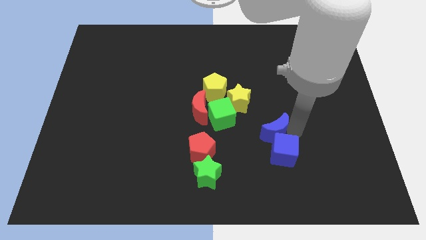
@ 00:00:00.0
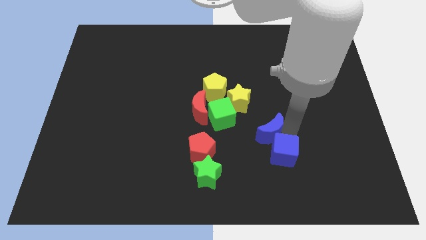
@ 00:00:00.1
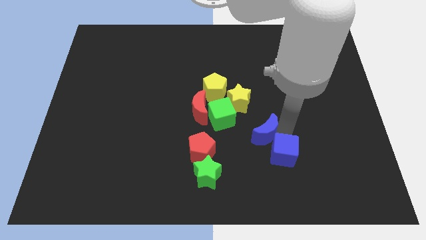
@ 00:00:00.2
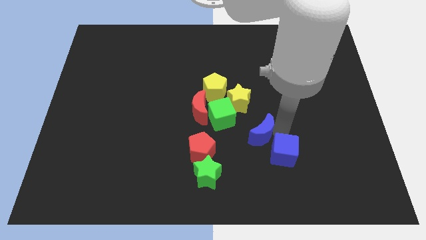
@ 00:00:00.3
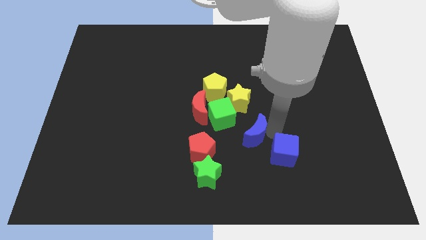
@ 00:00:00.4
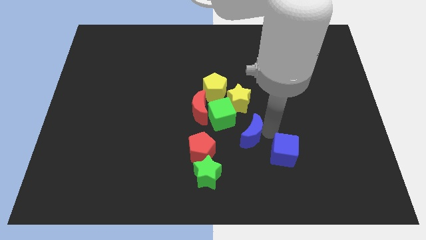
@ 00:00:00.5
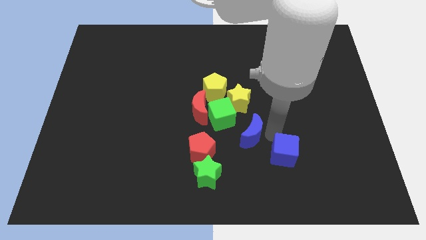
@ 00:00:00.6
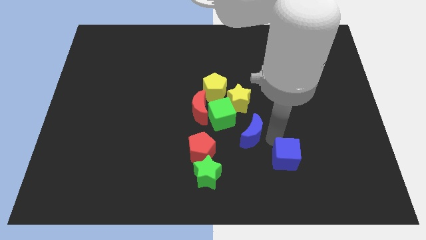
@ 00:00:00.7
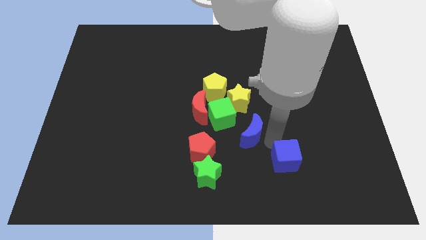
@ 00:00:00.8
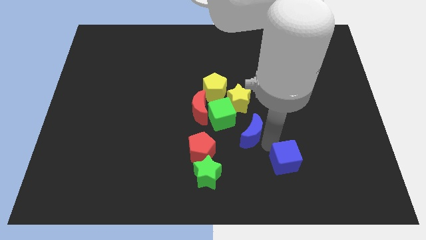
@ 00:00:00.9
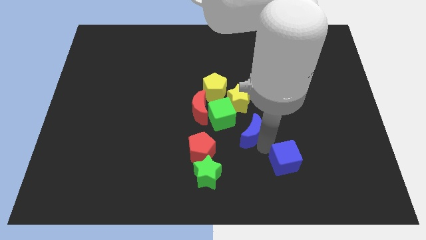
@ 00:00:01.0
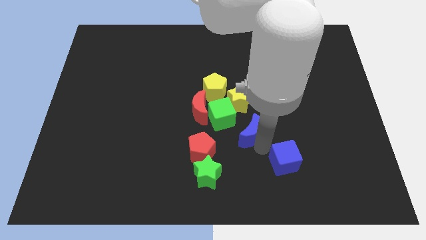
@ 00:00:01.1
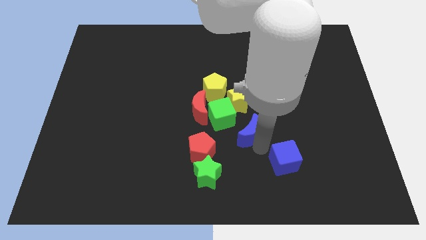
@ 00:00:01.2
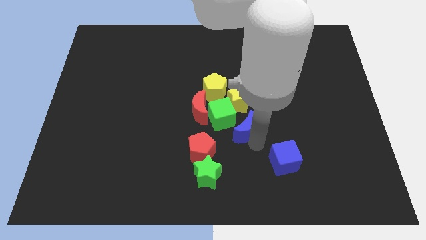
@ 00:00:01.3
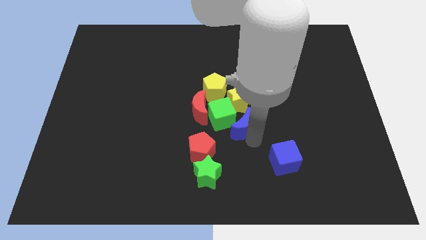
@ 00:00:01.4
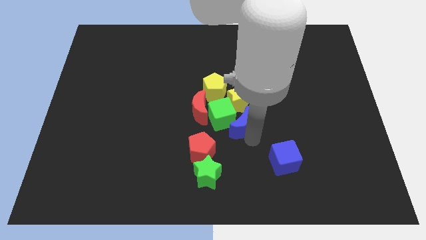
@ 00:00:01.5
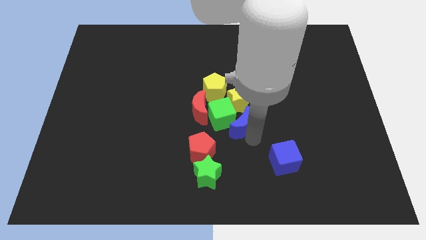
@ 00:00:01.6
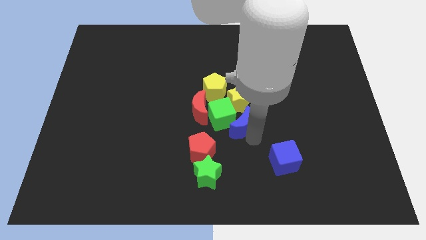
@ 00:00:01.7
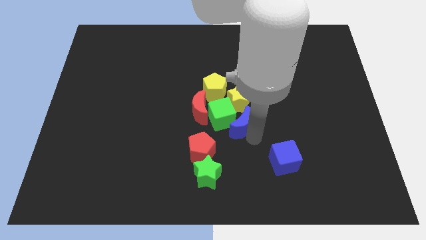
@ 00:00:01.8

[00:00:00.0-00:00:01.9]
separate the blue crescent from the blue cube

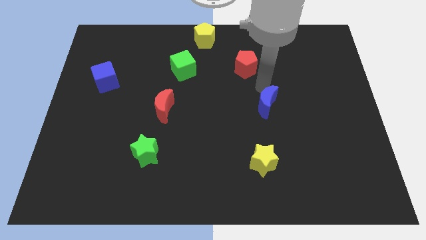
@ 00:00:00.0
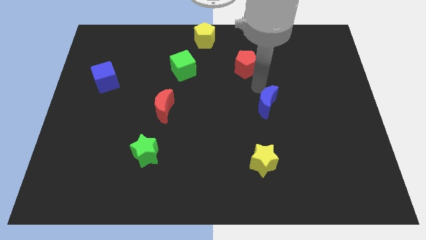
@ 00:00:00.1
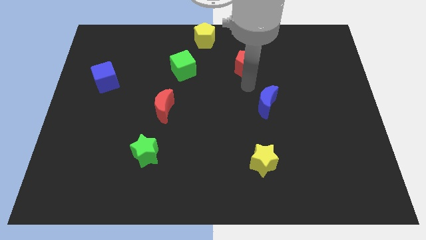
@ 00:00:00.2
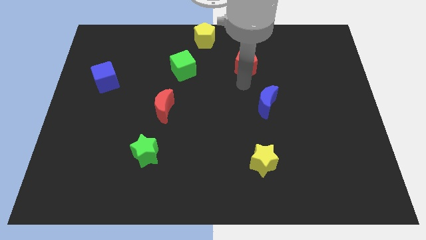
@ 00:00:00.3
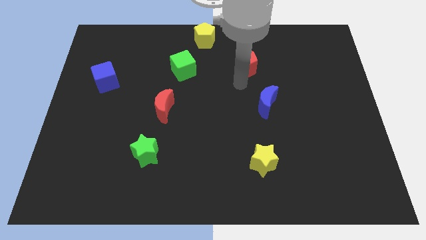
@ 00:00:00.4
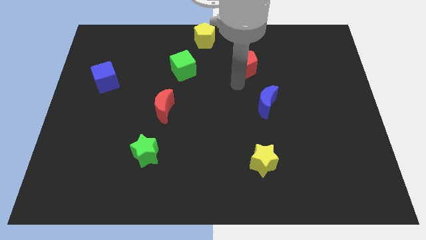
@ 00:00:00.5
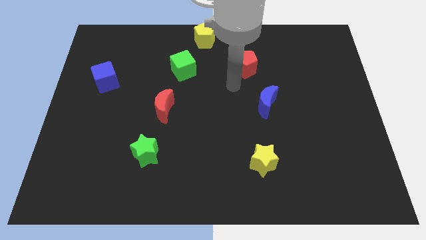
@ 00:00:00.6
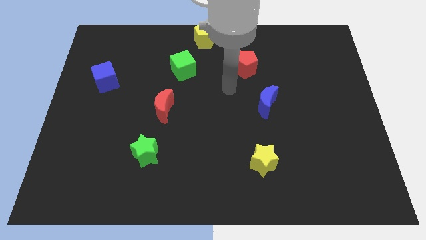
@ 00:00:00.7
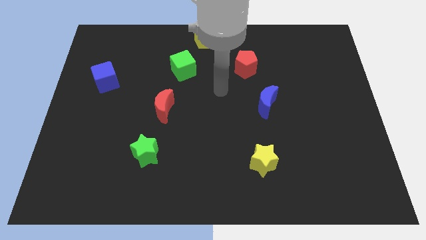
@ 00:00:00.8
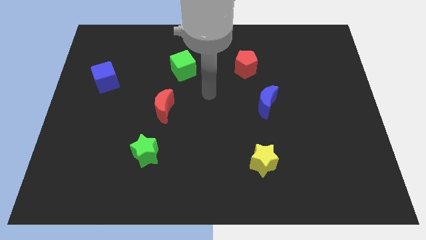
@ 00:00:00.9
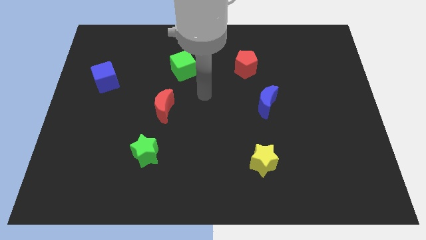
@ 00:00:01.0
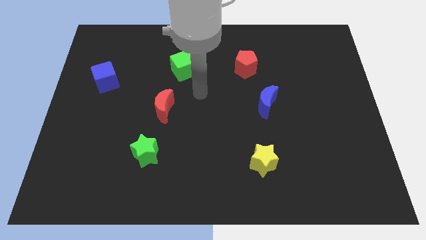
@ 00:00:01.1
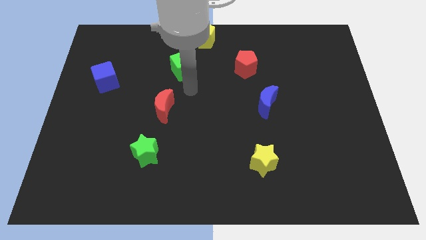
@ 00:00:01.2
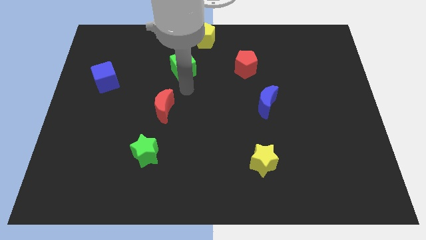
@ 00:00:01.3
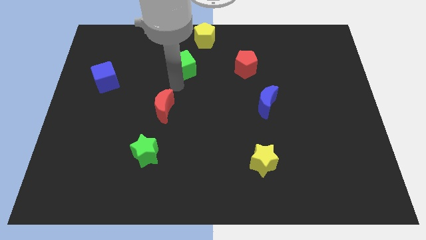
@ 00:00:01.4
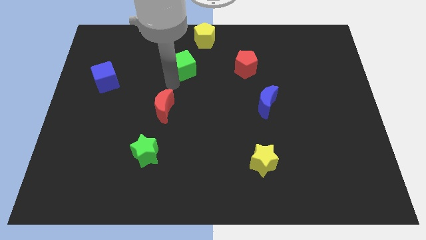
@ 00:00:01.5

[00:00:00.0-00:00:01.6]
move your hand in between the green cube and red crescent

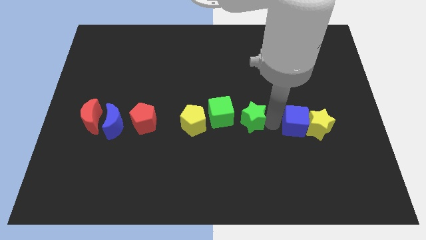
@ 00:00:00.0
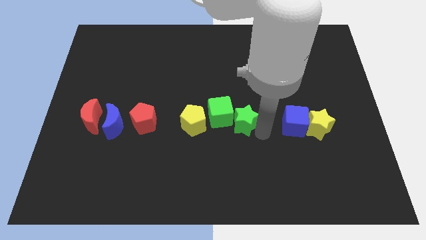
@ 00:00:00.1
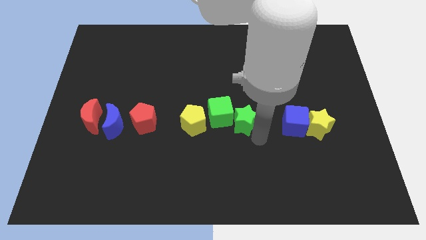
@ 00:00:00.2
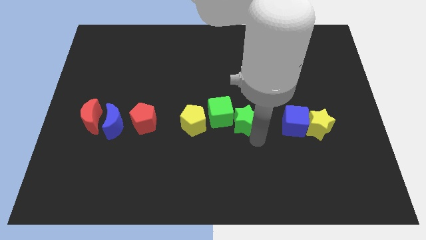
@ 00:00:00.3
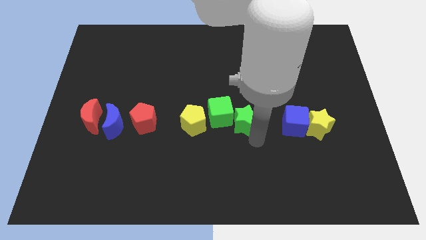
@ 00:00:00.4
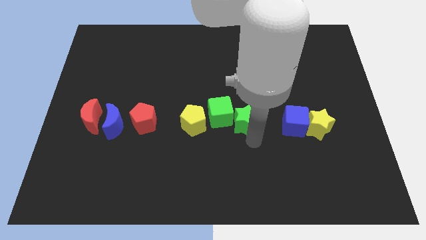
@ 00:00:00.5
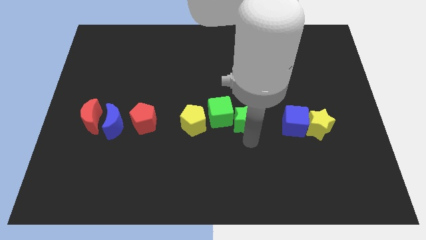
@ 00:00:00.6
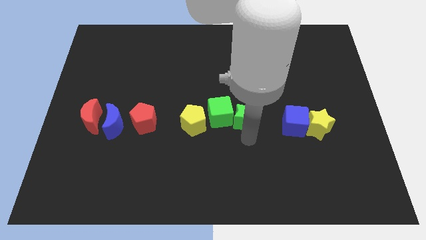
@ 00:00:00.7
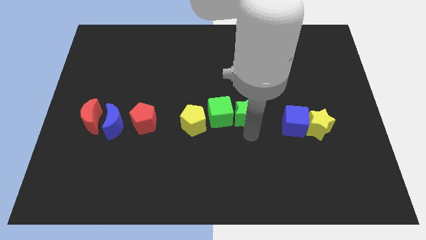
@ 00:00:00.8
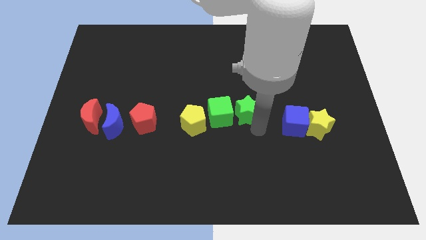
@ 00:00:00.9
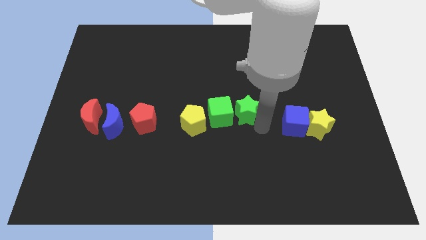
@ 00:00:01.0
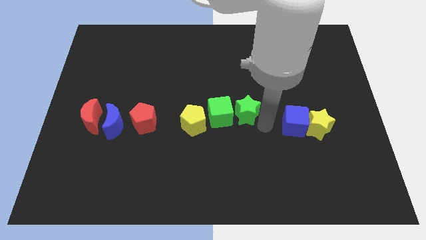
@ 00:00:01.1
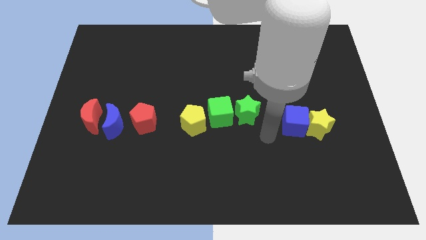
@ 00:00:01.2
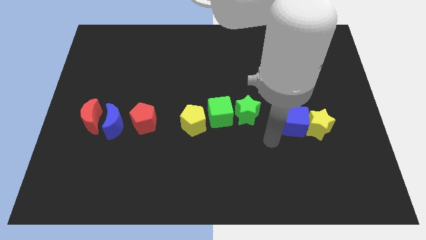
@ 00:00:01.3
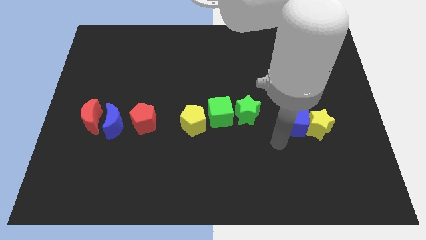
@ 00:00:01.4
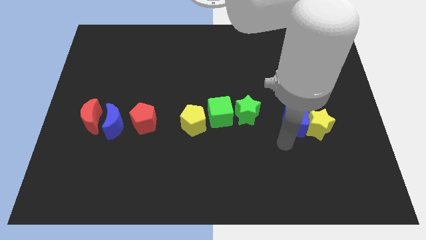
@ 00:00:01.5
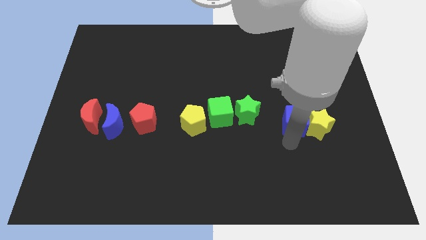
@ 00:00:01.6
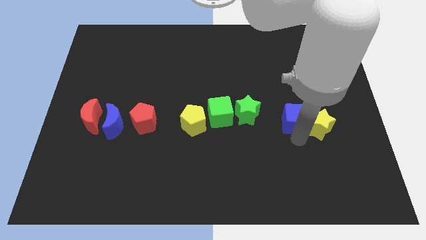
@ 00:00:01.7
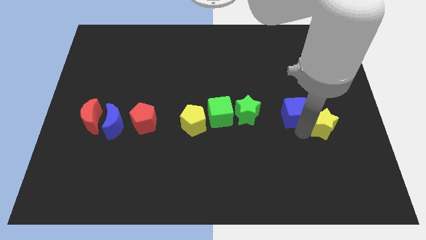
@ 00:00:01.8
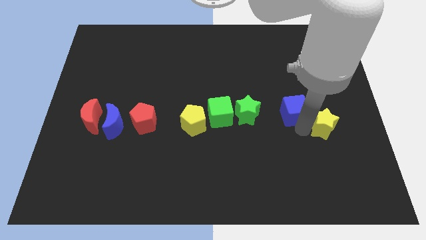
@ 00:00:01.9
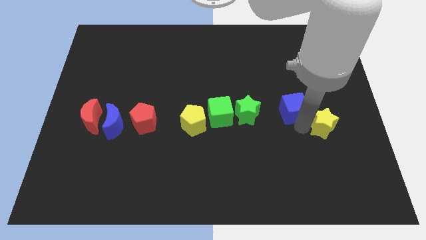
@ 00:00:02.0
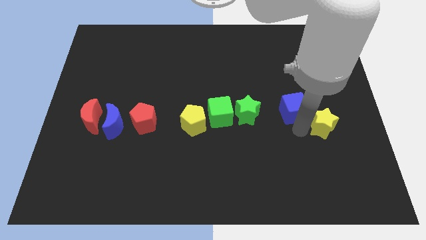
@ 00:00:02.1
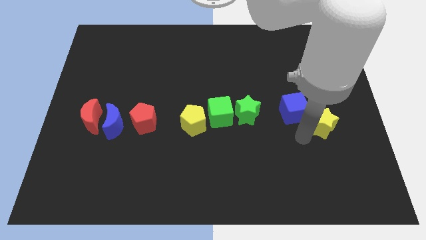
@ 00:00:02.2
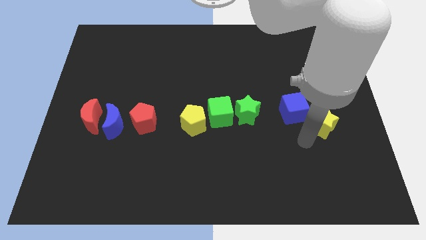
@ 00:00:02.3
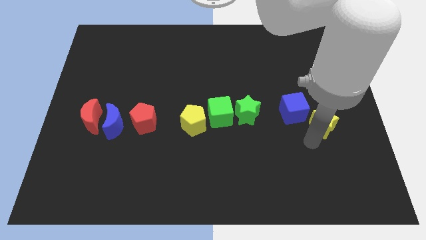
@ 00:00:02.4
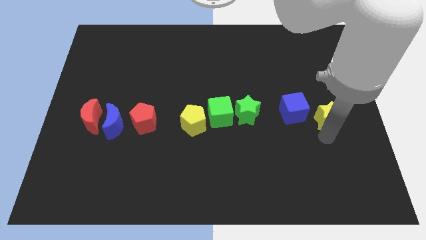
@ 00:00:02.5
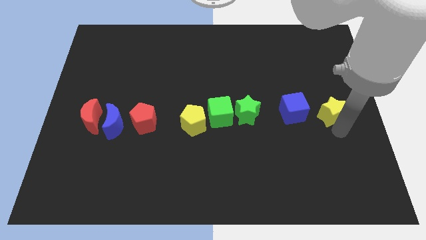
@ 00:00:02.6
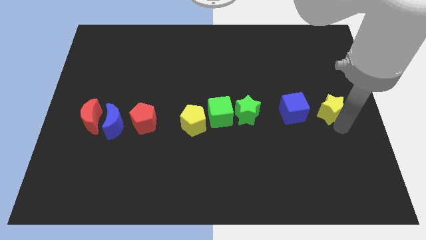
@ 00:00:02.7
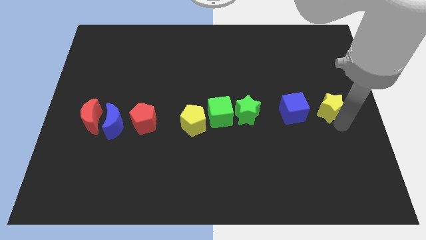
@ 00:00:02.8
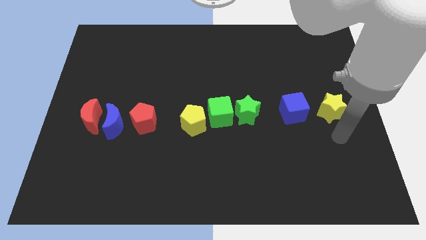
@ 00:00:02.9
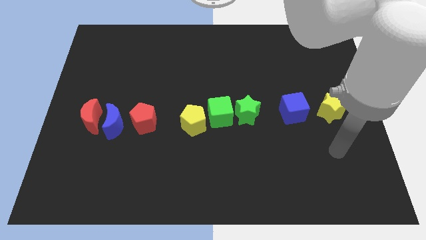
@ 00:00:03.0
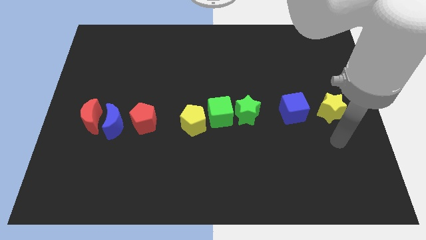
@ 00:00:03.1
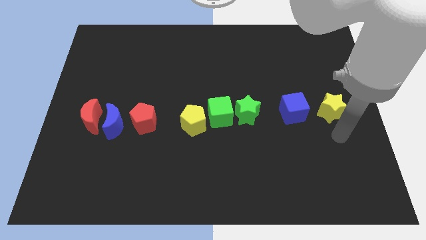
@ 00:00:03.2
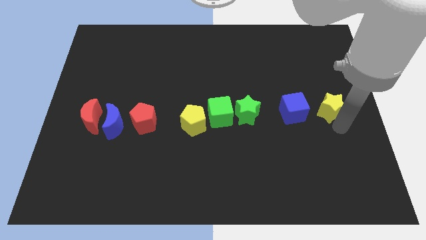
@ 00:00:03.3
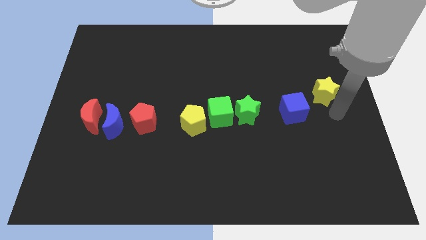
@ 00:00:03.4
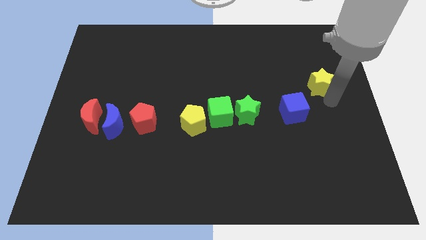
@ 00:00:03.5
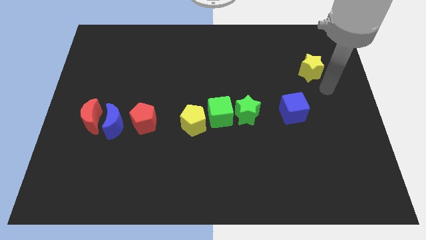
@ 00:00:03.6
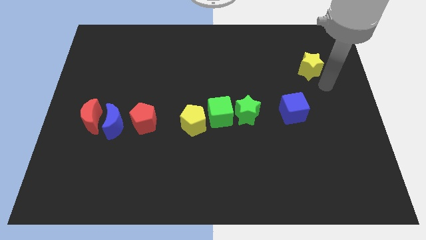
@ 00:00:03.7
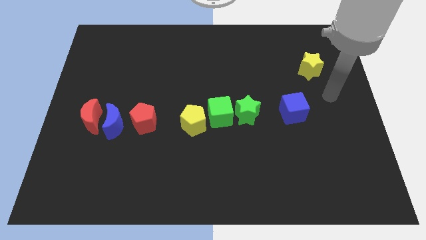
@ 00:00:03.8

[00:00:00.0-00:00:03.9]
slightly push the green cube towards the green cube

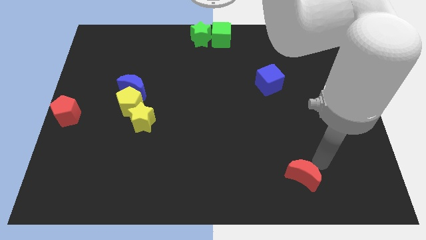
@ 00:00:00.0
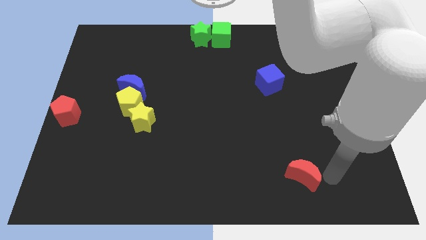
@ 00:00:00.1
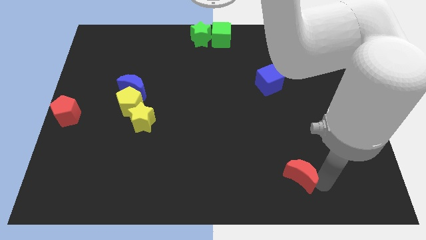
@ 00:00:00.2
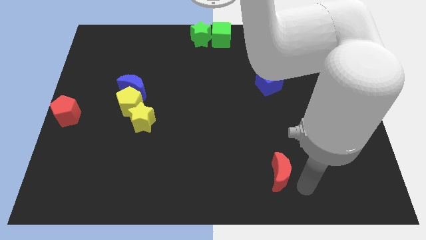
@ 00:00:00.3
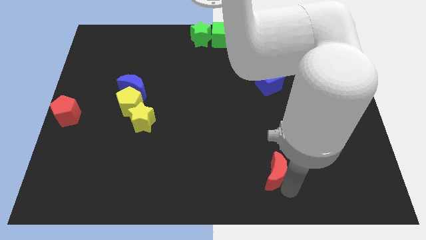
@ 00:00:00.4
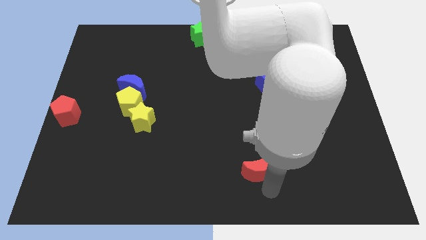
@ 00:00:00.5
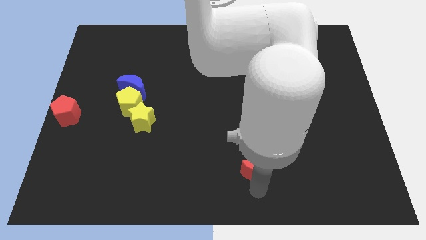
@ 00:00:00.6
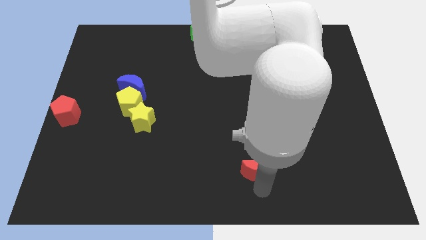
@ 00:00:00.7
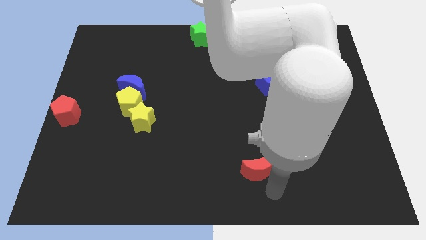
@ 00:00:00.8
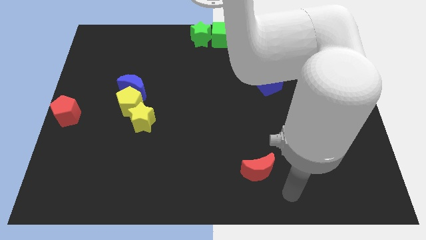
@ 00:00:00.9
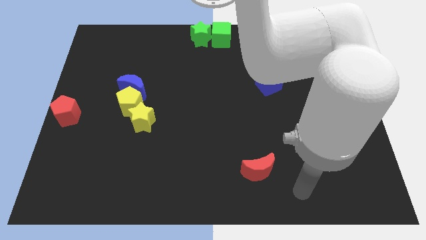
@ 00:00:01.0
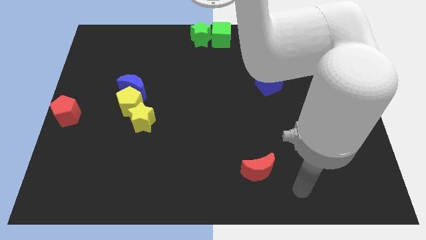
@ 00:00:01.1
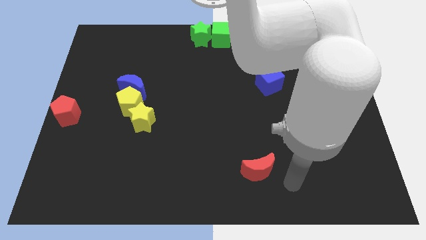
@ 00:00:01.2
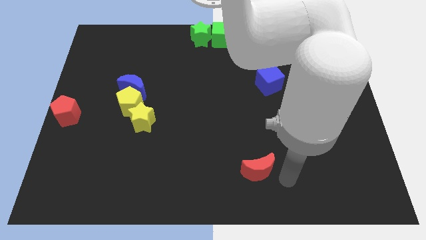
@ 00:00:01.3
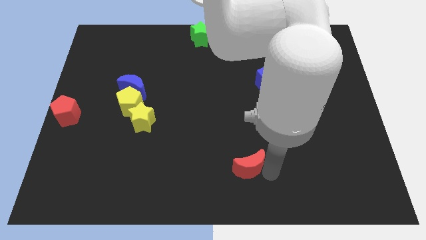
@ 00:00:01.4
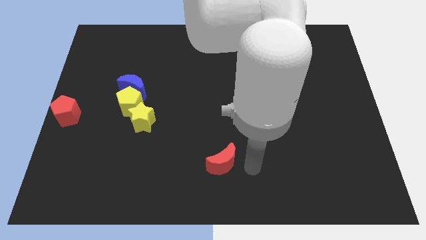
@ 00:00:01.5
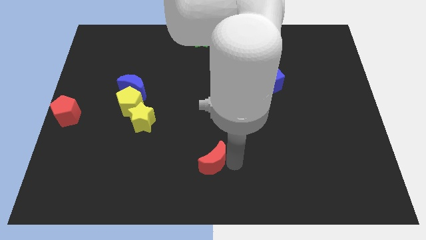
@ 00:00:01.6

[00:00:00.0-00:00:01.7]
move the red crescent to the bottom center of the board
